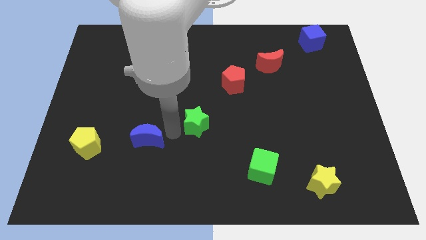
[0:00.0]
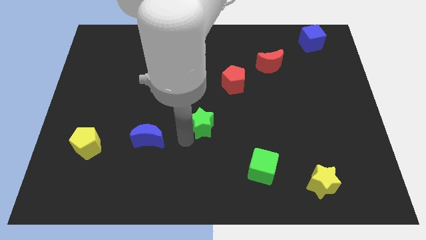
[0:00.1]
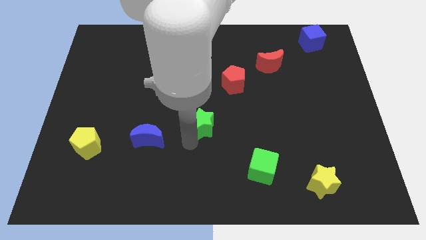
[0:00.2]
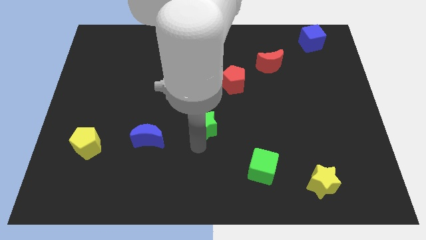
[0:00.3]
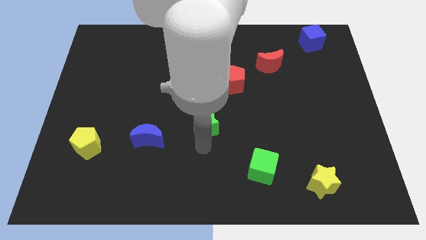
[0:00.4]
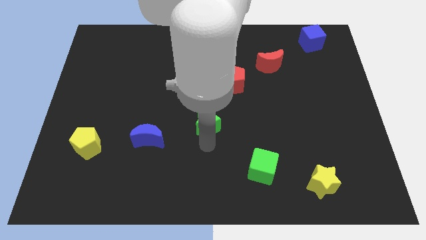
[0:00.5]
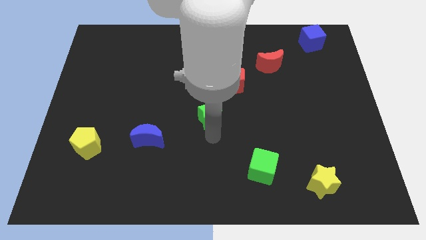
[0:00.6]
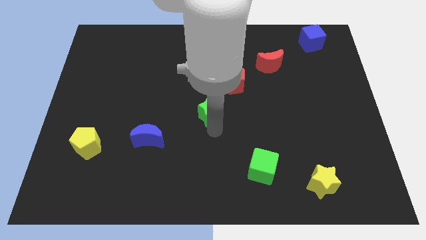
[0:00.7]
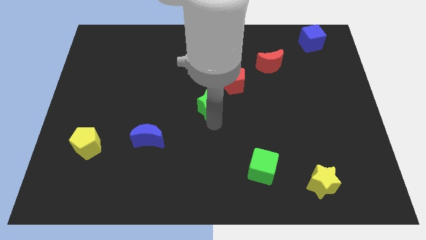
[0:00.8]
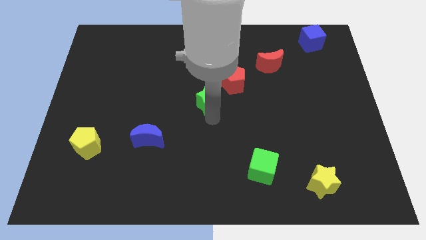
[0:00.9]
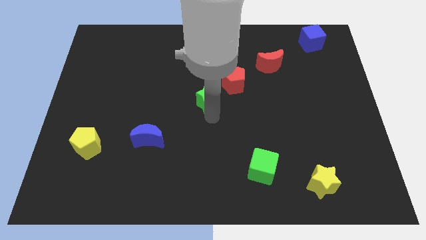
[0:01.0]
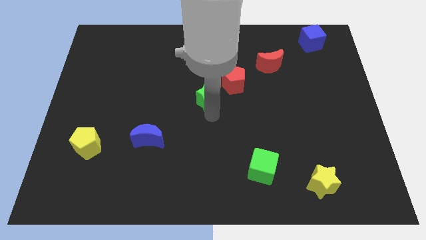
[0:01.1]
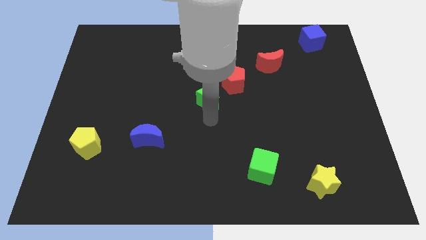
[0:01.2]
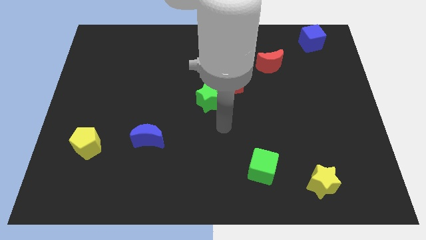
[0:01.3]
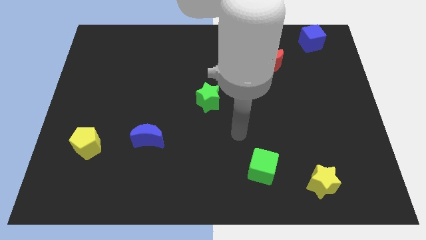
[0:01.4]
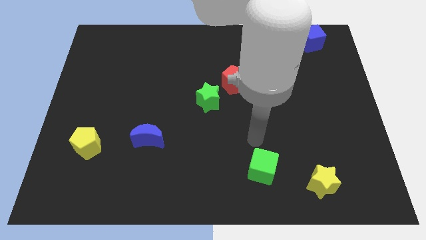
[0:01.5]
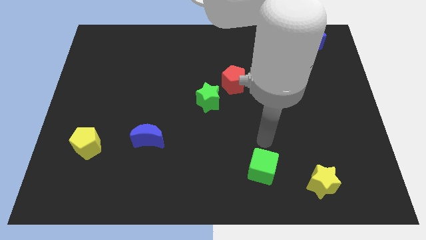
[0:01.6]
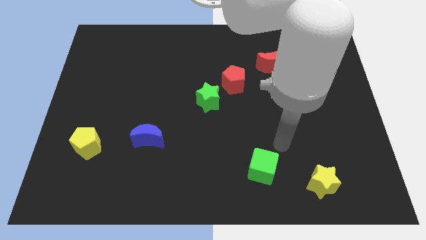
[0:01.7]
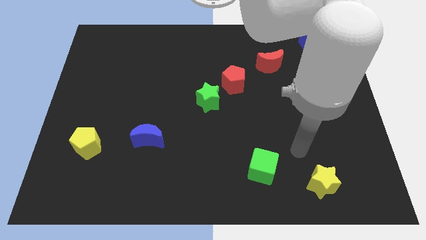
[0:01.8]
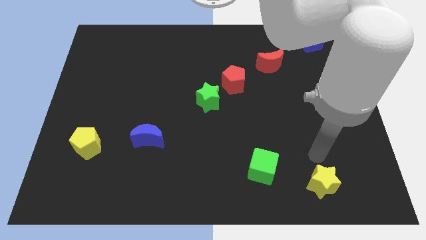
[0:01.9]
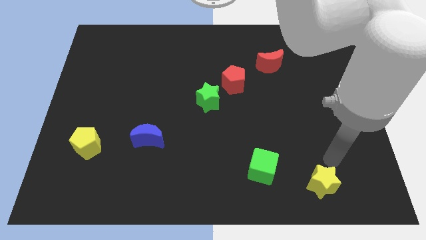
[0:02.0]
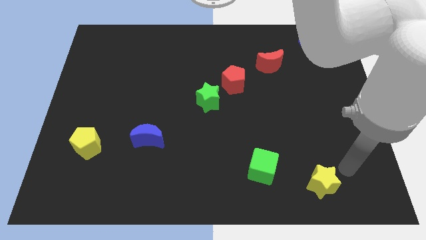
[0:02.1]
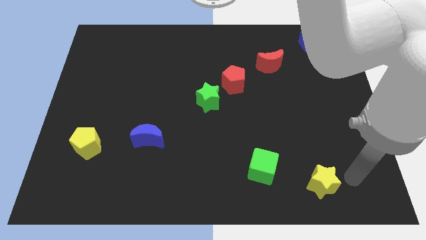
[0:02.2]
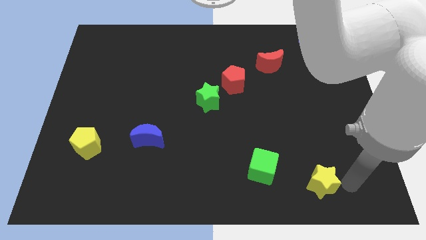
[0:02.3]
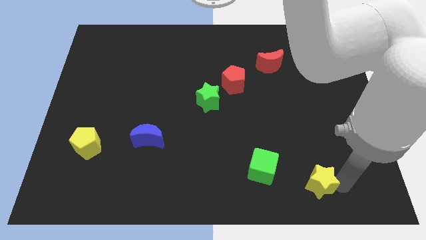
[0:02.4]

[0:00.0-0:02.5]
slide the green star towards the center of the board

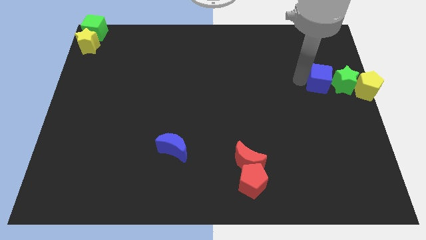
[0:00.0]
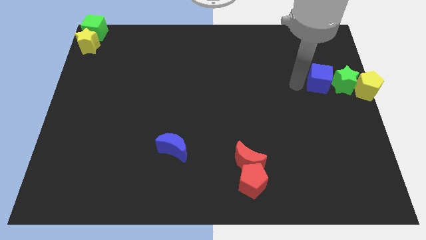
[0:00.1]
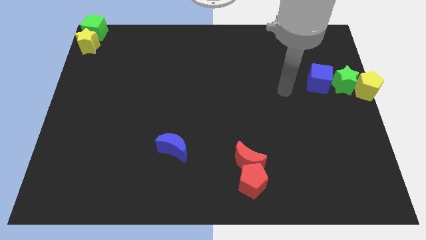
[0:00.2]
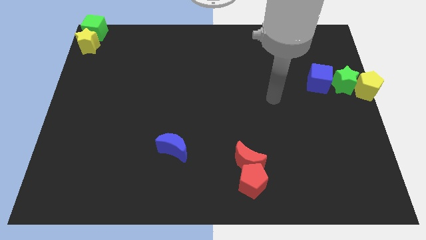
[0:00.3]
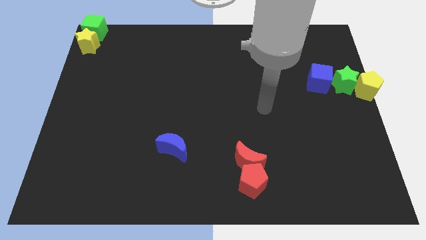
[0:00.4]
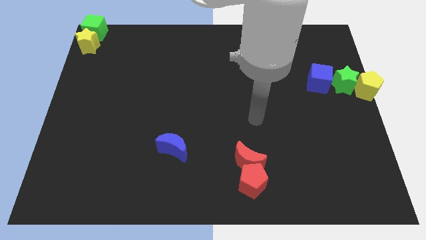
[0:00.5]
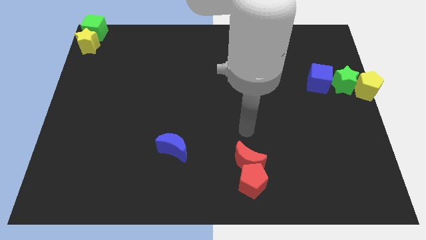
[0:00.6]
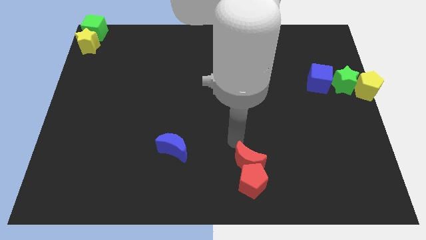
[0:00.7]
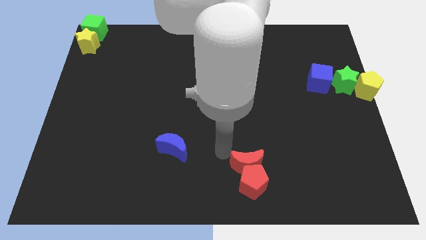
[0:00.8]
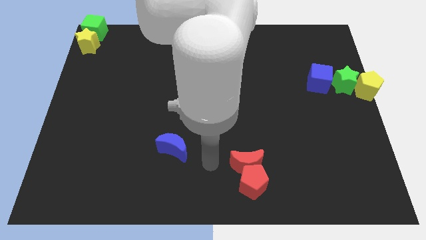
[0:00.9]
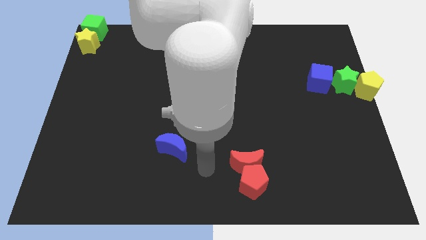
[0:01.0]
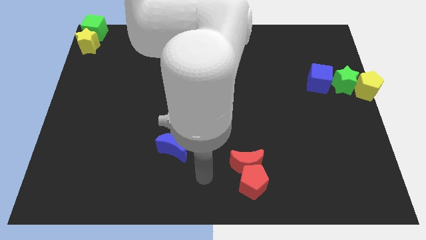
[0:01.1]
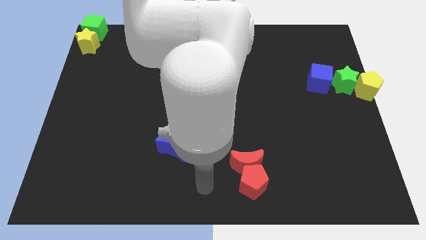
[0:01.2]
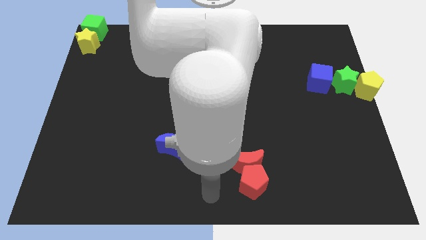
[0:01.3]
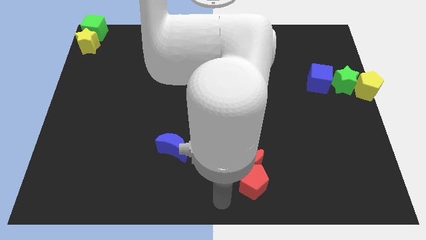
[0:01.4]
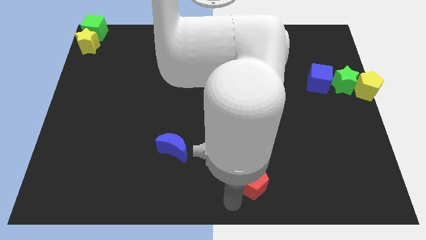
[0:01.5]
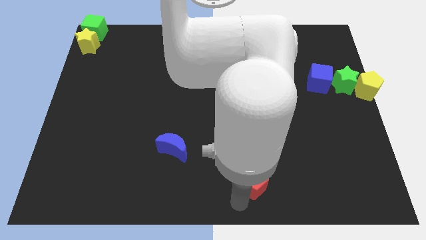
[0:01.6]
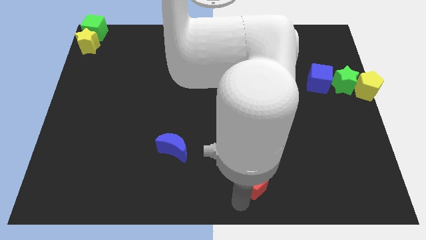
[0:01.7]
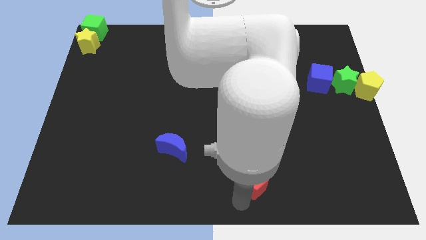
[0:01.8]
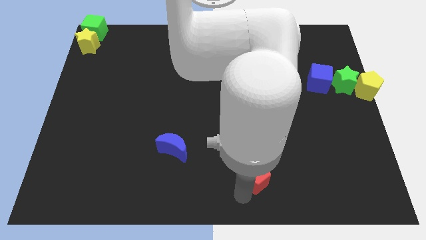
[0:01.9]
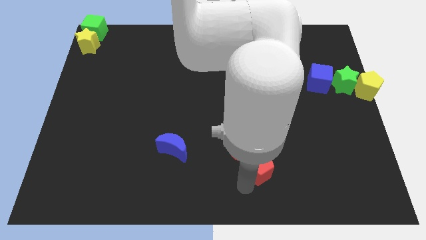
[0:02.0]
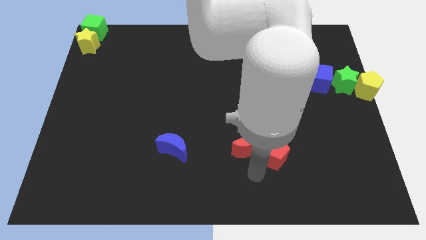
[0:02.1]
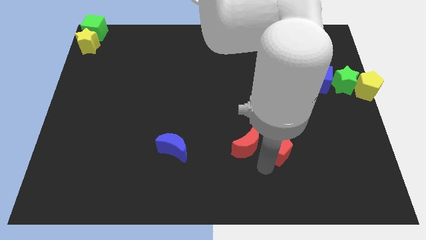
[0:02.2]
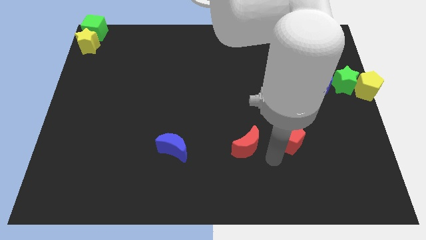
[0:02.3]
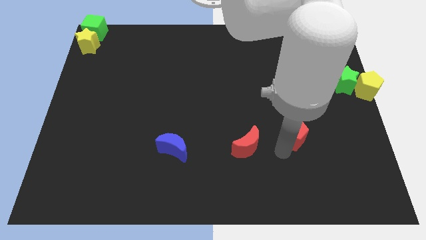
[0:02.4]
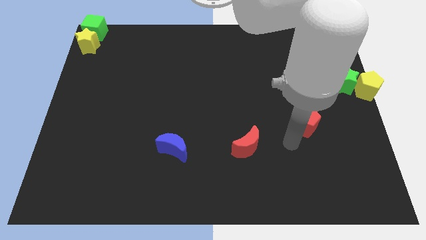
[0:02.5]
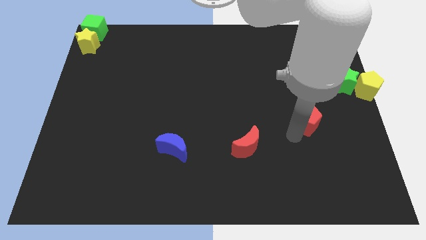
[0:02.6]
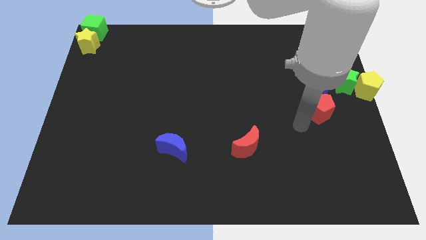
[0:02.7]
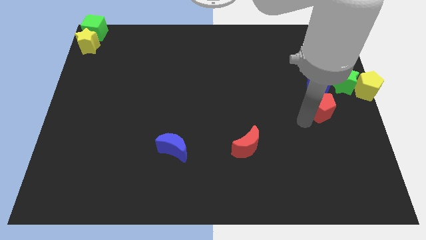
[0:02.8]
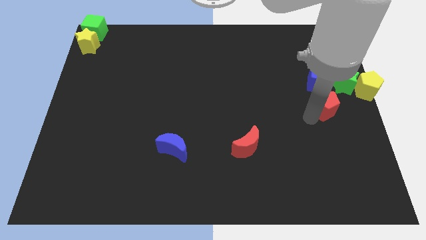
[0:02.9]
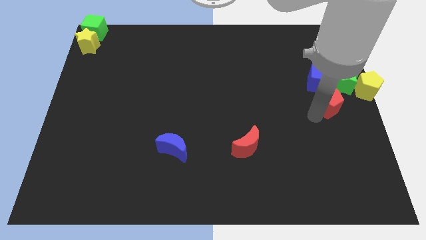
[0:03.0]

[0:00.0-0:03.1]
push the red pentagon towards the group of blocks

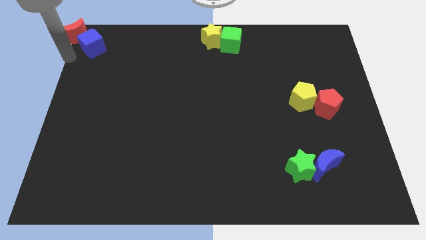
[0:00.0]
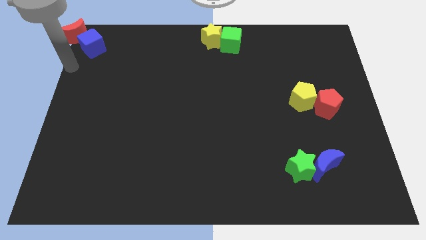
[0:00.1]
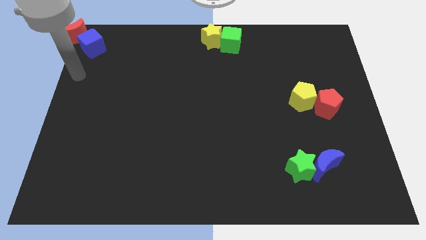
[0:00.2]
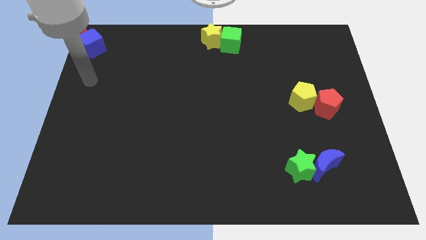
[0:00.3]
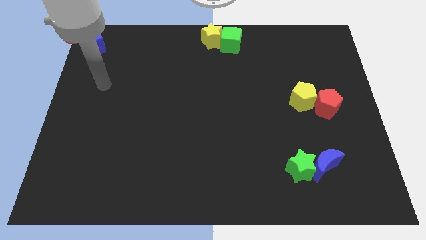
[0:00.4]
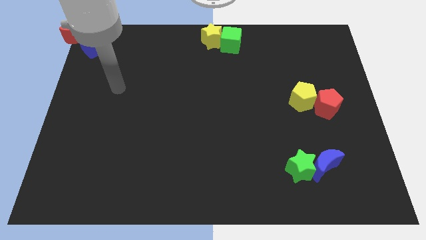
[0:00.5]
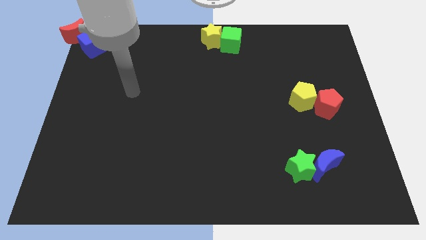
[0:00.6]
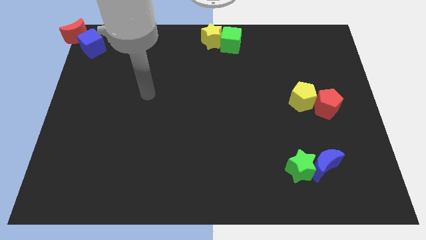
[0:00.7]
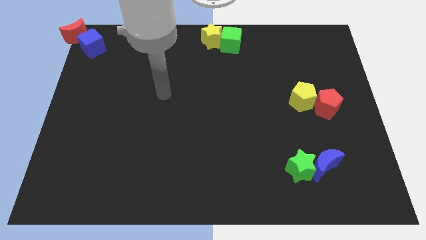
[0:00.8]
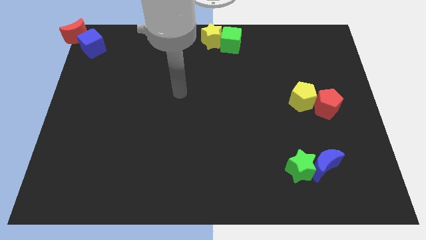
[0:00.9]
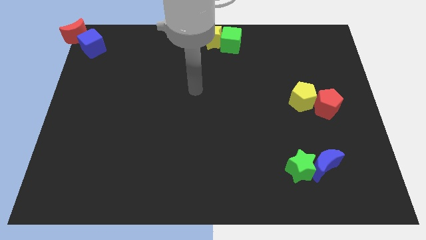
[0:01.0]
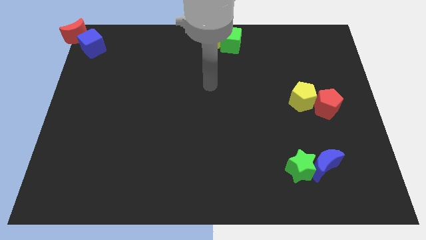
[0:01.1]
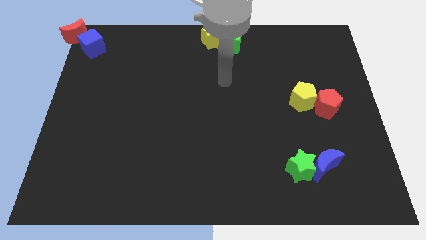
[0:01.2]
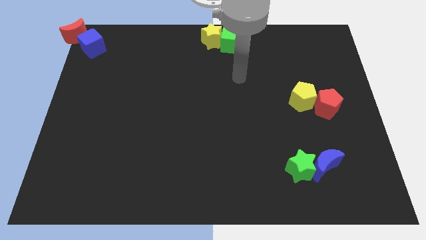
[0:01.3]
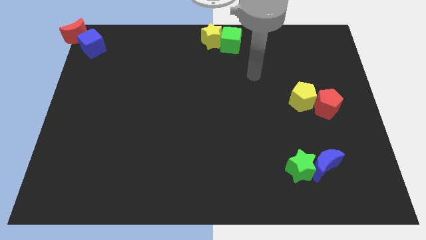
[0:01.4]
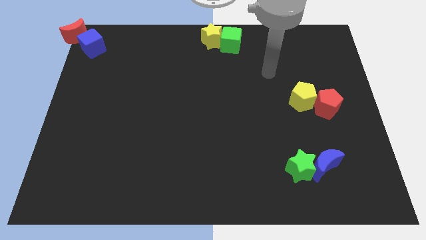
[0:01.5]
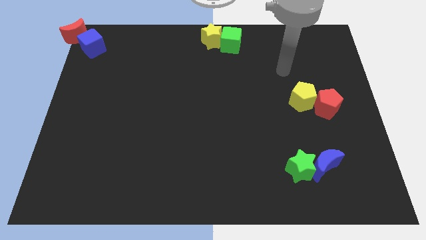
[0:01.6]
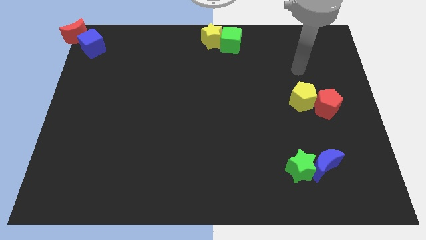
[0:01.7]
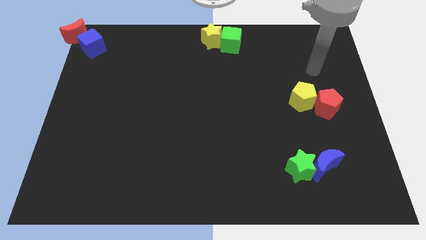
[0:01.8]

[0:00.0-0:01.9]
point your hand above the yellow pentagon

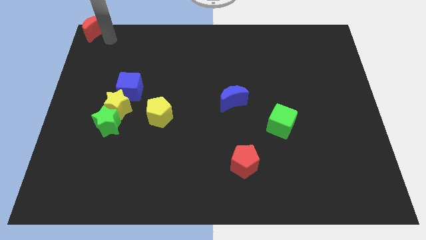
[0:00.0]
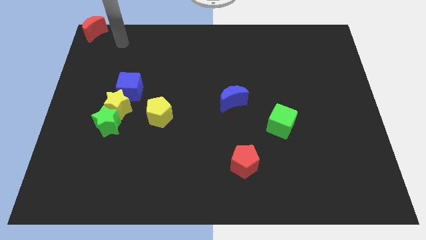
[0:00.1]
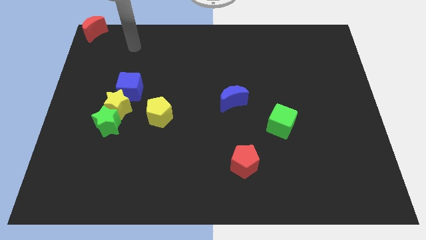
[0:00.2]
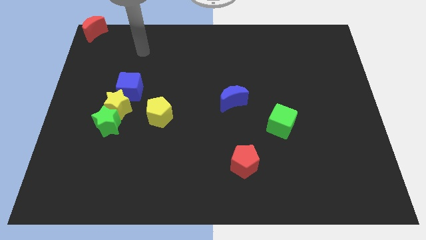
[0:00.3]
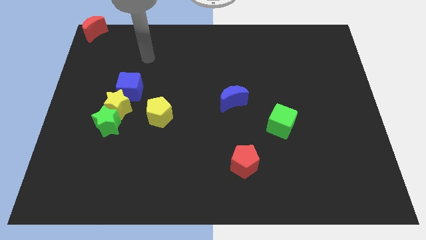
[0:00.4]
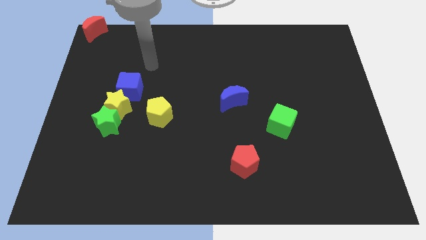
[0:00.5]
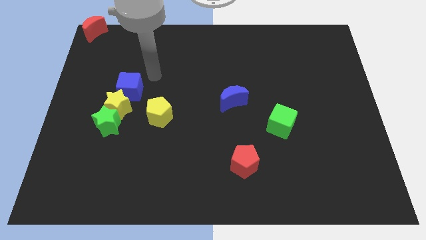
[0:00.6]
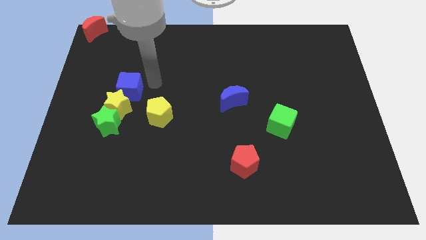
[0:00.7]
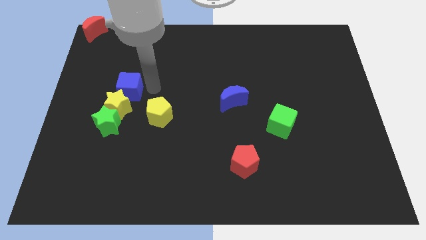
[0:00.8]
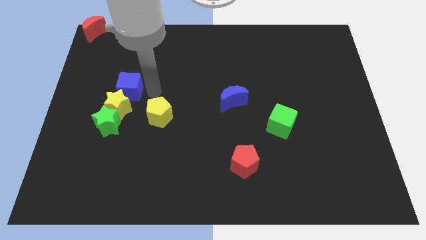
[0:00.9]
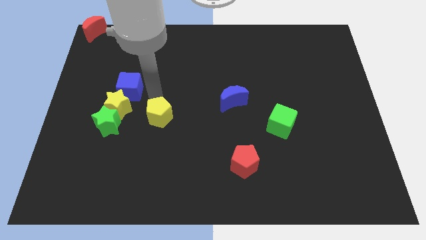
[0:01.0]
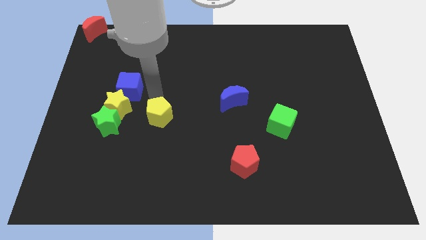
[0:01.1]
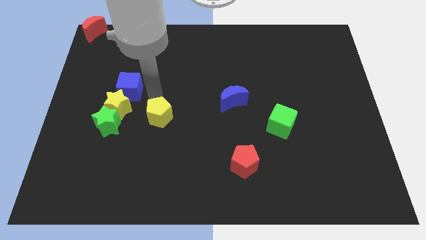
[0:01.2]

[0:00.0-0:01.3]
point your arm at the top of the yellow pentagon

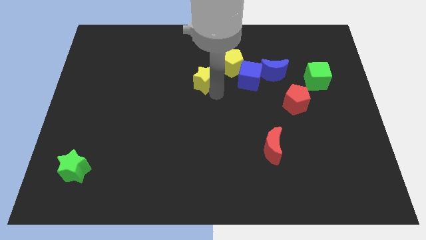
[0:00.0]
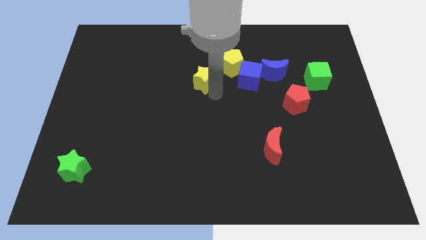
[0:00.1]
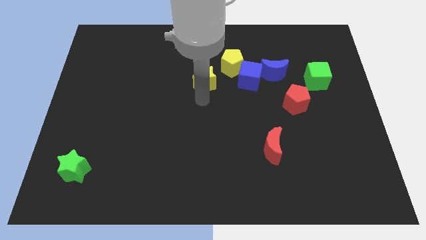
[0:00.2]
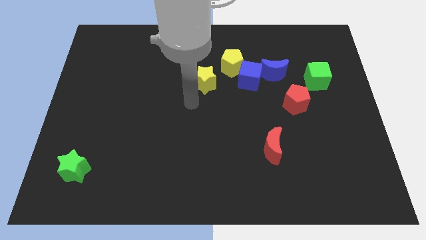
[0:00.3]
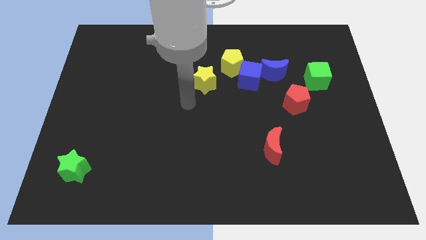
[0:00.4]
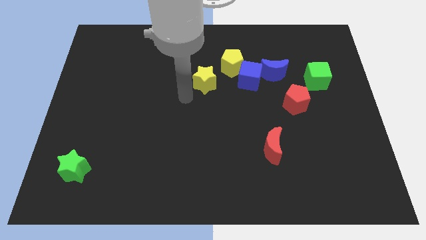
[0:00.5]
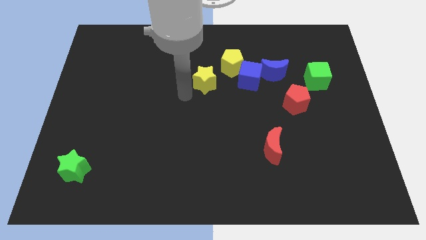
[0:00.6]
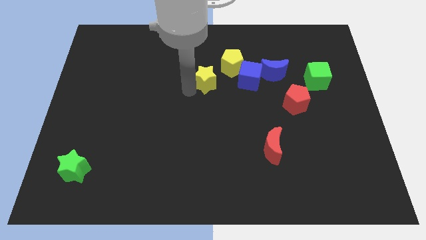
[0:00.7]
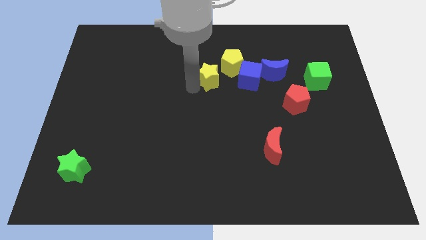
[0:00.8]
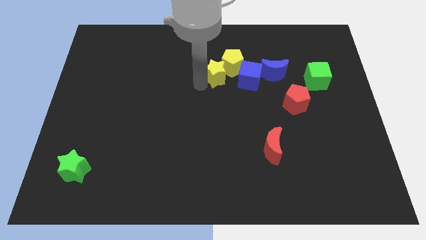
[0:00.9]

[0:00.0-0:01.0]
push the yellow star into the yellow pentagon
